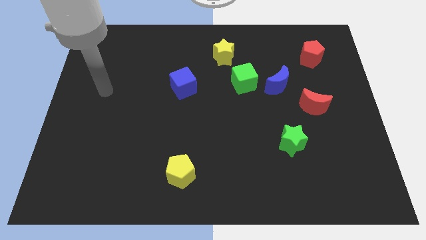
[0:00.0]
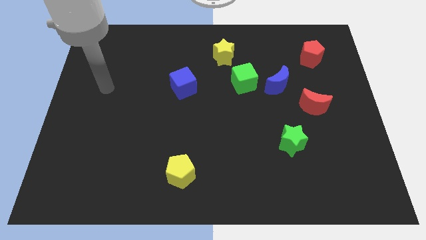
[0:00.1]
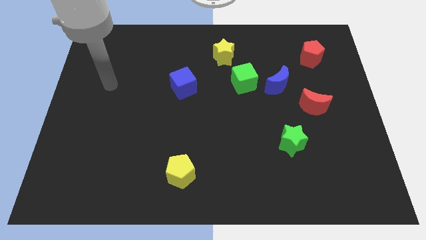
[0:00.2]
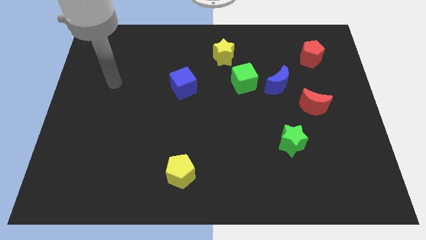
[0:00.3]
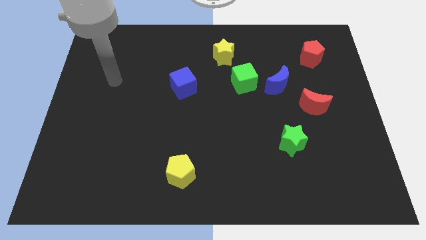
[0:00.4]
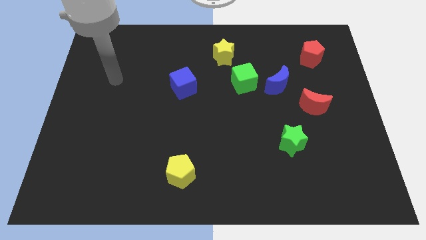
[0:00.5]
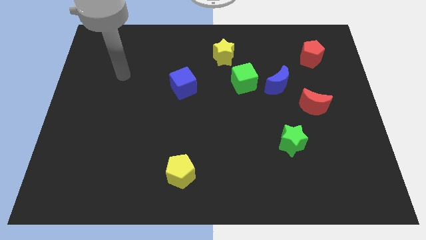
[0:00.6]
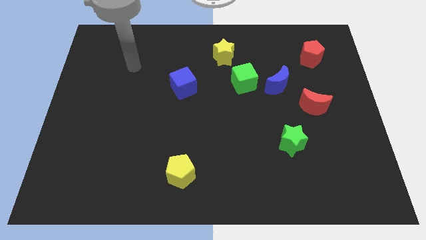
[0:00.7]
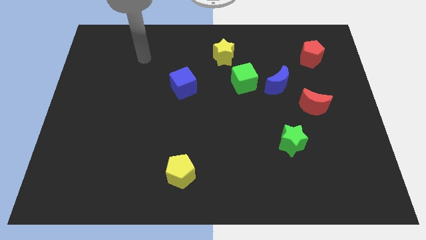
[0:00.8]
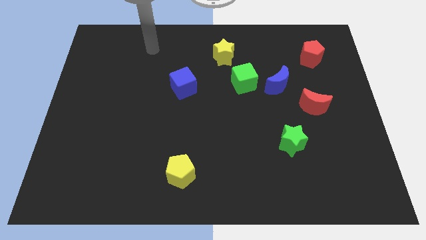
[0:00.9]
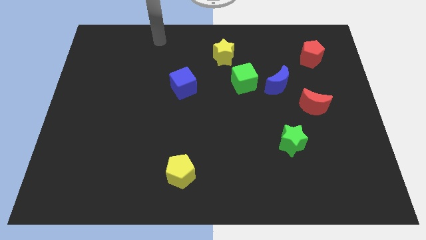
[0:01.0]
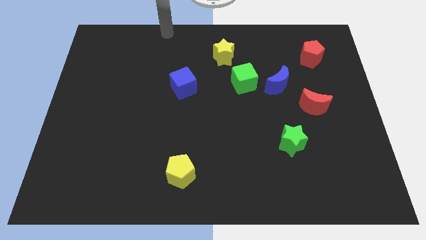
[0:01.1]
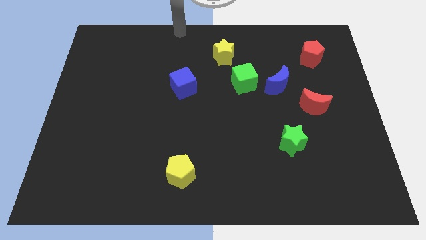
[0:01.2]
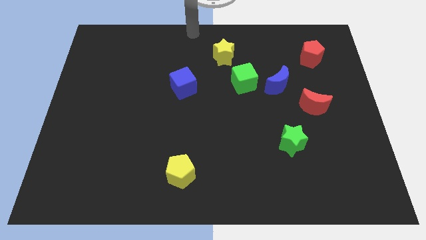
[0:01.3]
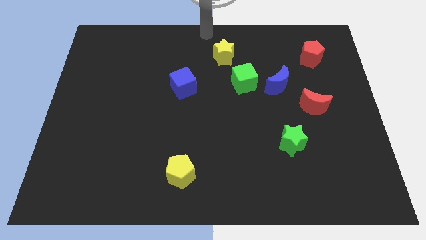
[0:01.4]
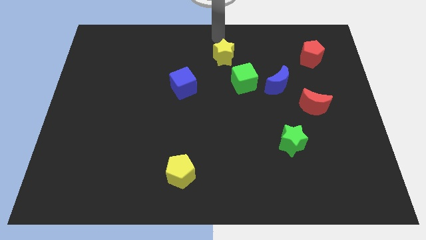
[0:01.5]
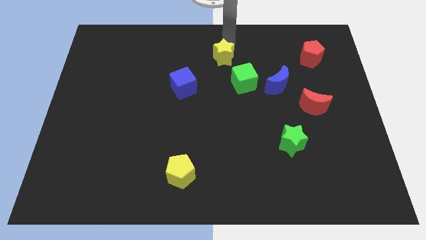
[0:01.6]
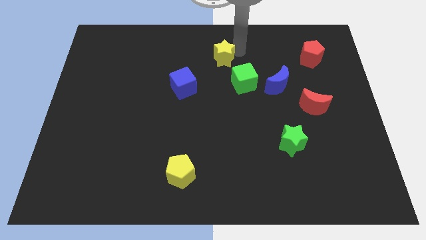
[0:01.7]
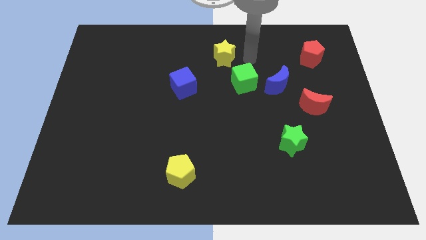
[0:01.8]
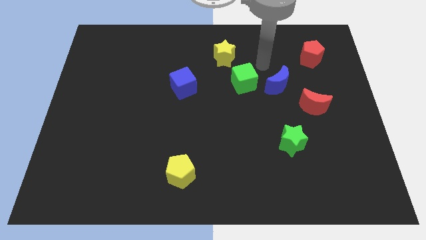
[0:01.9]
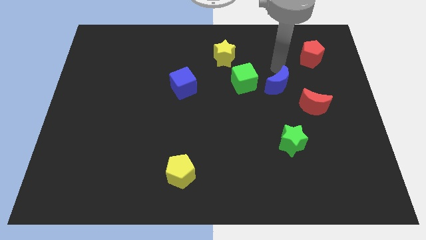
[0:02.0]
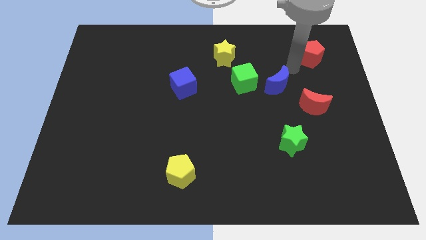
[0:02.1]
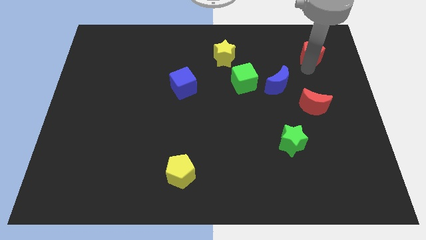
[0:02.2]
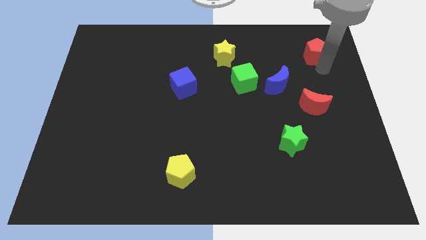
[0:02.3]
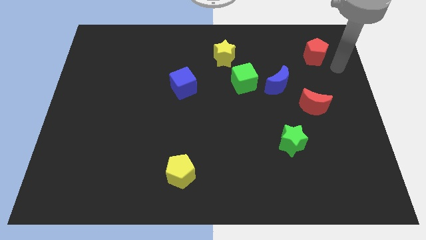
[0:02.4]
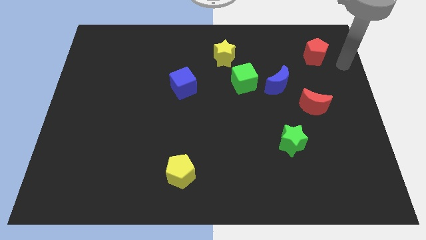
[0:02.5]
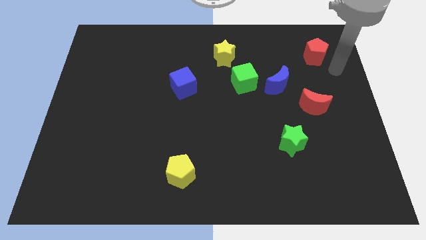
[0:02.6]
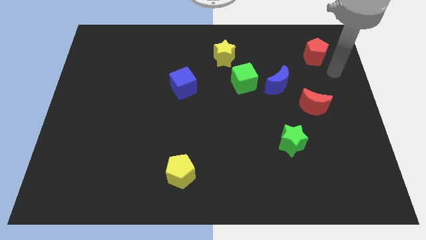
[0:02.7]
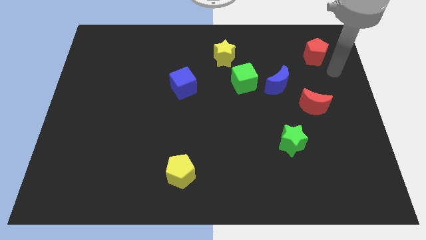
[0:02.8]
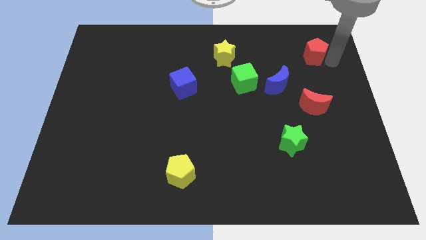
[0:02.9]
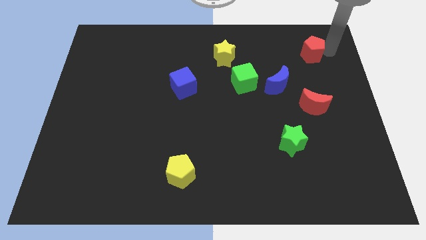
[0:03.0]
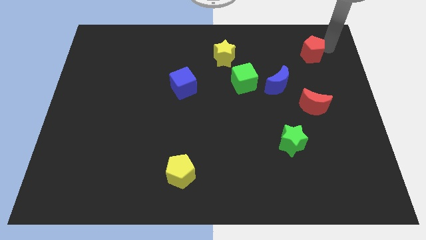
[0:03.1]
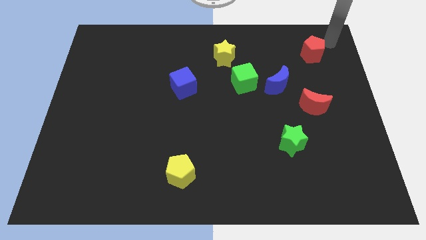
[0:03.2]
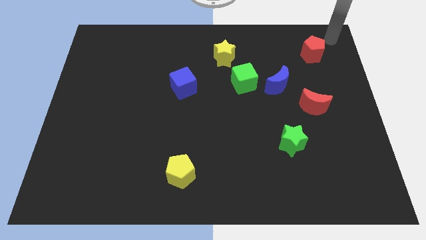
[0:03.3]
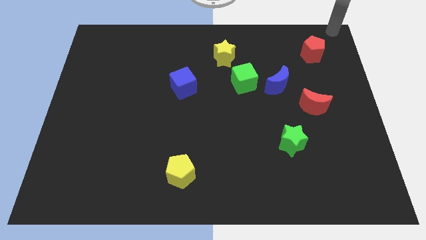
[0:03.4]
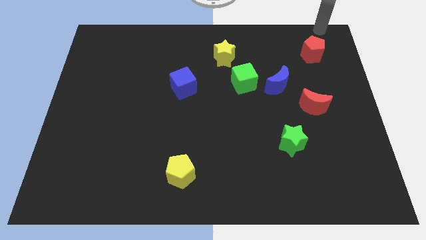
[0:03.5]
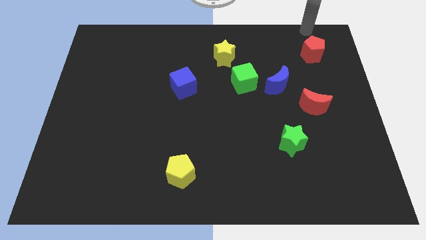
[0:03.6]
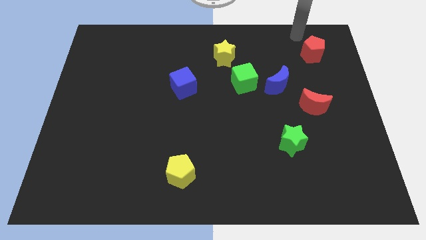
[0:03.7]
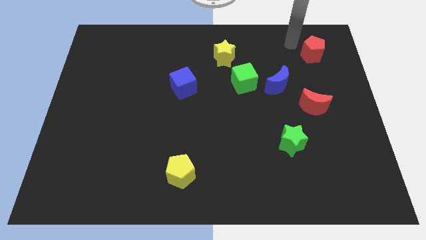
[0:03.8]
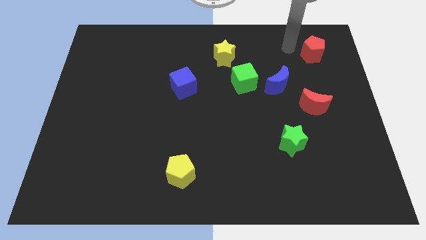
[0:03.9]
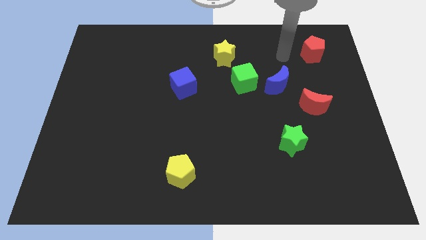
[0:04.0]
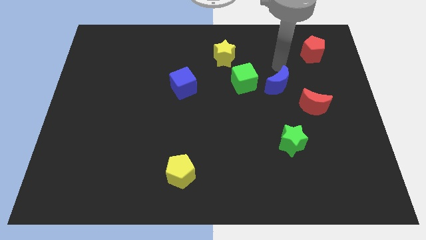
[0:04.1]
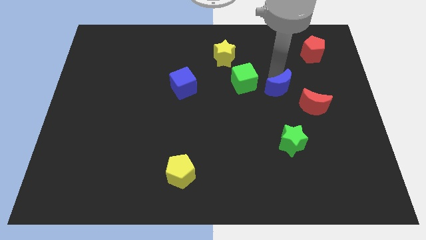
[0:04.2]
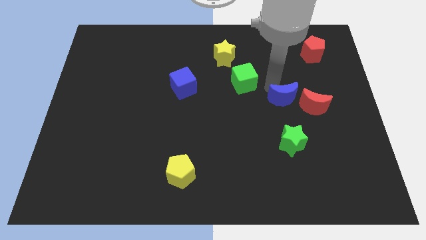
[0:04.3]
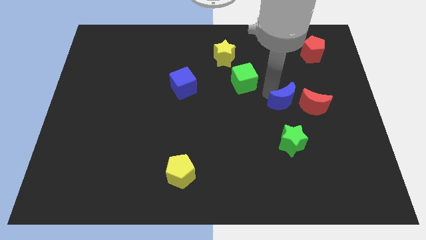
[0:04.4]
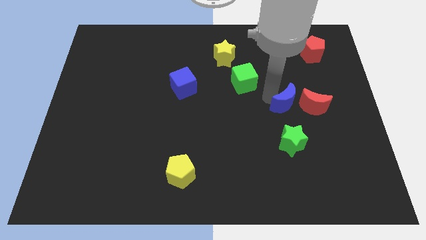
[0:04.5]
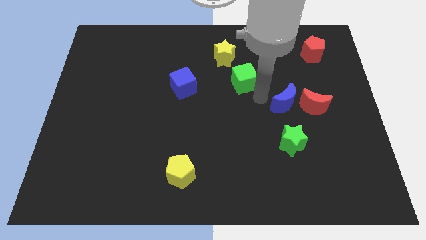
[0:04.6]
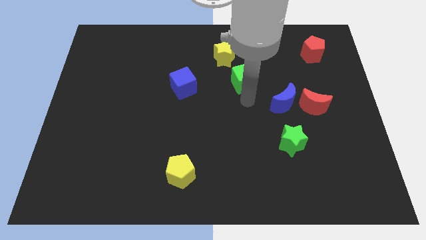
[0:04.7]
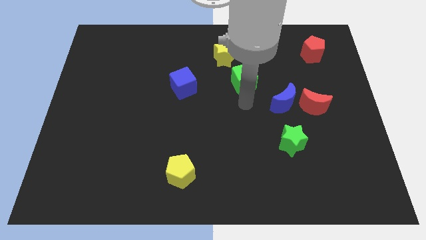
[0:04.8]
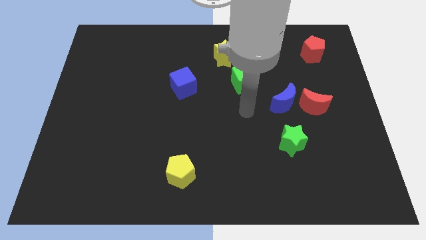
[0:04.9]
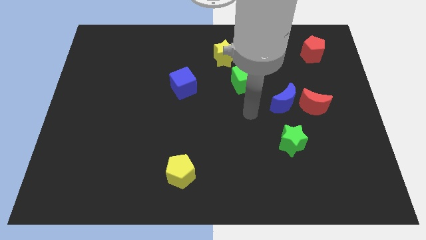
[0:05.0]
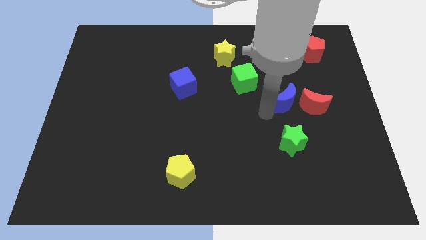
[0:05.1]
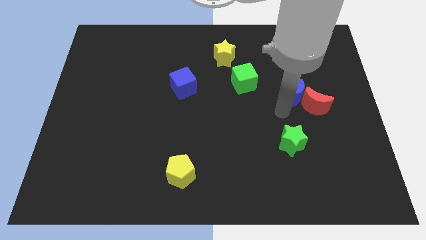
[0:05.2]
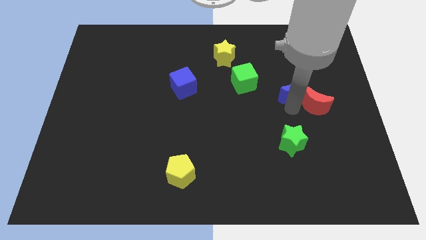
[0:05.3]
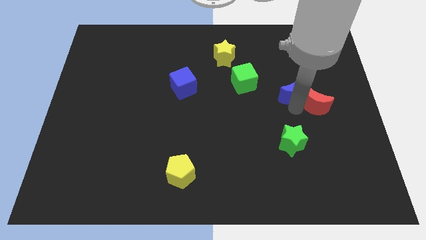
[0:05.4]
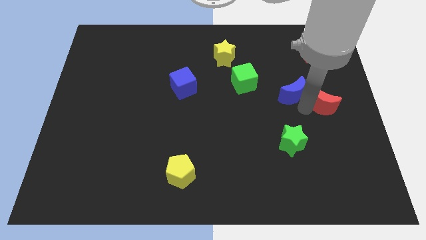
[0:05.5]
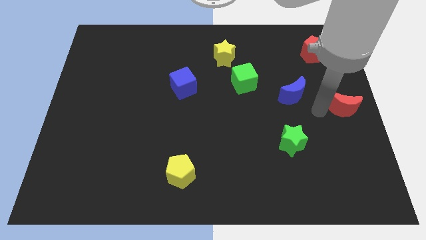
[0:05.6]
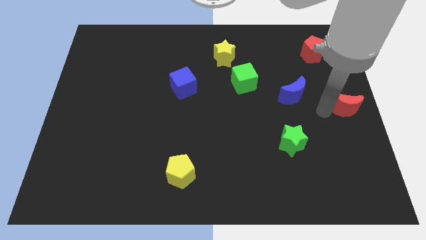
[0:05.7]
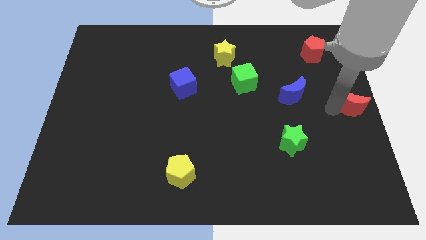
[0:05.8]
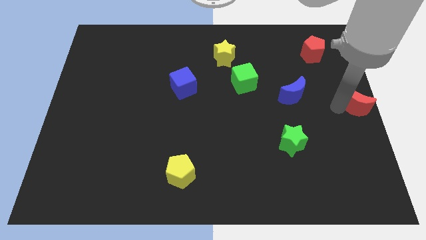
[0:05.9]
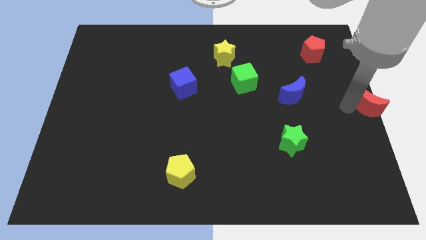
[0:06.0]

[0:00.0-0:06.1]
push the red crescent to the right center of the board

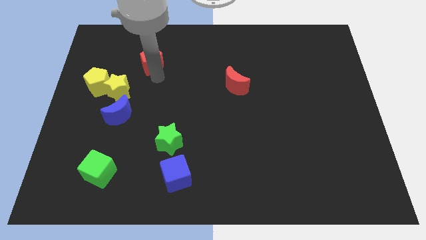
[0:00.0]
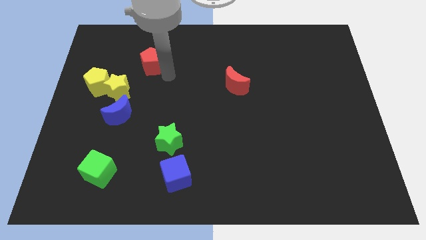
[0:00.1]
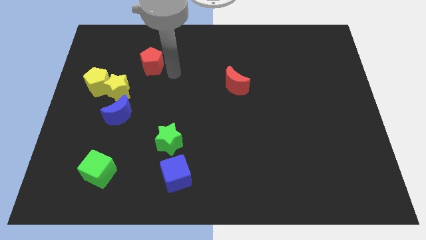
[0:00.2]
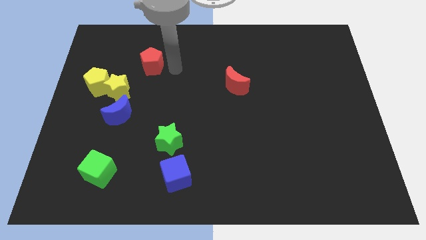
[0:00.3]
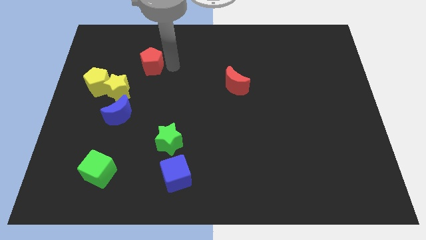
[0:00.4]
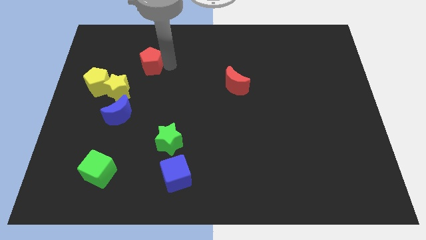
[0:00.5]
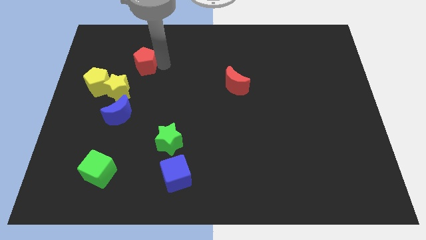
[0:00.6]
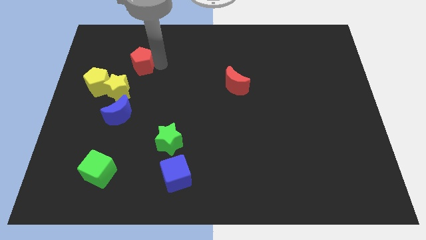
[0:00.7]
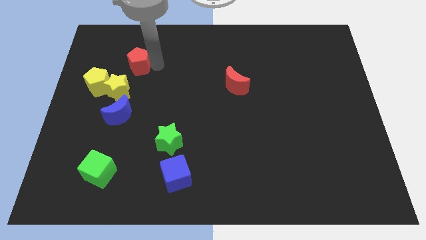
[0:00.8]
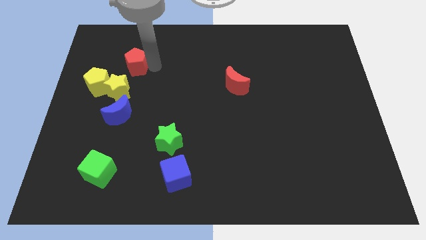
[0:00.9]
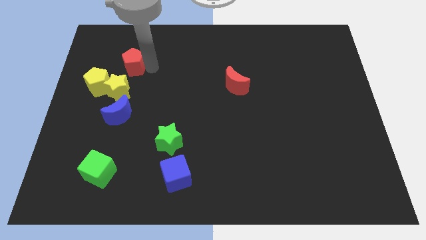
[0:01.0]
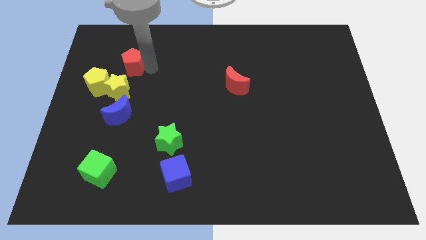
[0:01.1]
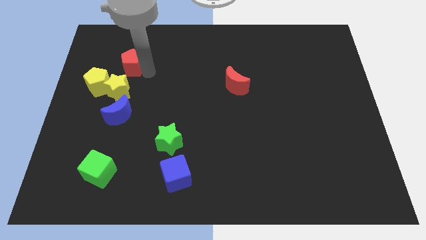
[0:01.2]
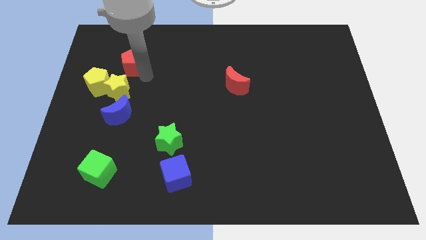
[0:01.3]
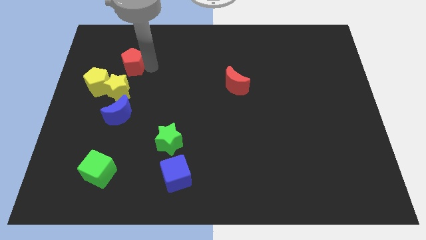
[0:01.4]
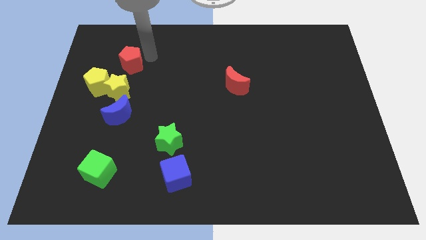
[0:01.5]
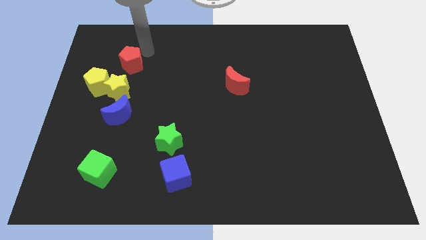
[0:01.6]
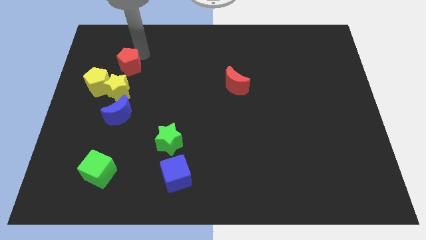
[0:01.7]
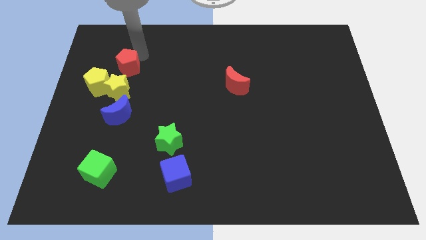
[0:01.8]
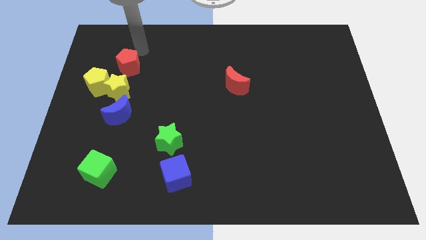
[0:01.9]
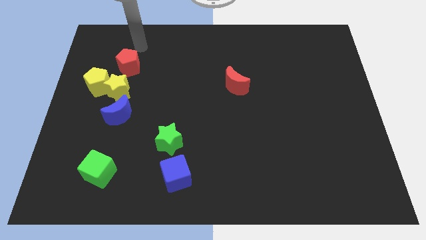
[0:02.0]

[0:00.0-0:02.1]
push the red pentagon vertically to the top right of the yellow star

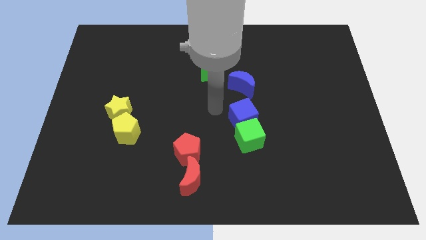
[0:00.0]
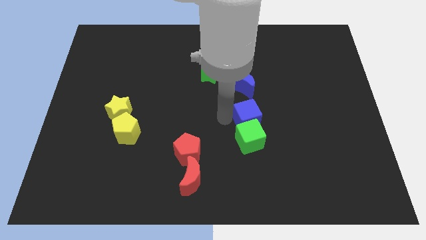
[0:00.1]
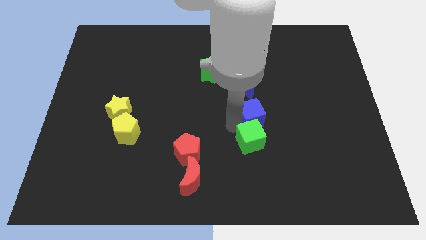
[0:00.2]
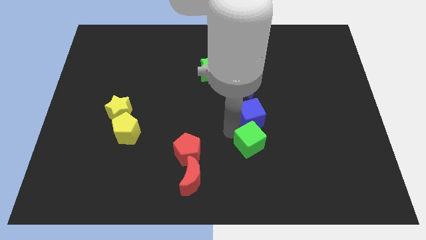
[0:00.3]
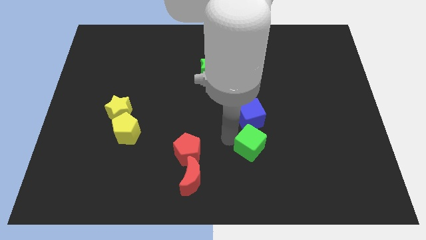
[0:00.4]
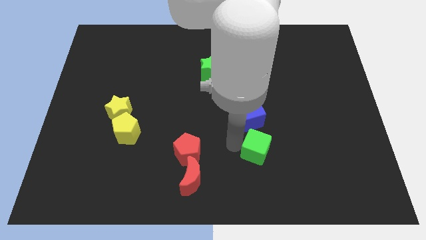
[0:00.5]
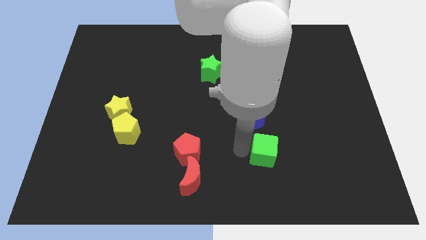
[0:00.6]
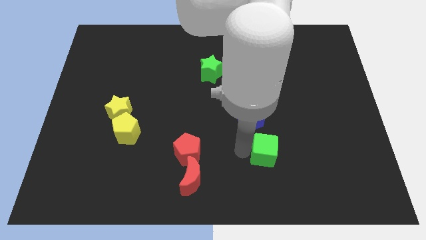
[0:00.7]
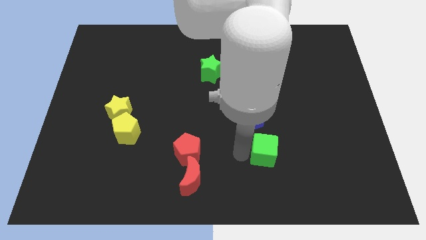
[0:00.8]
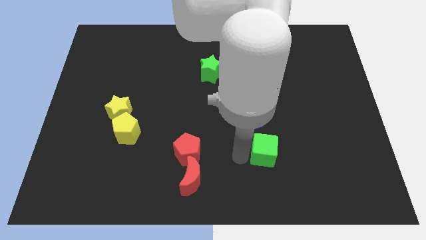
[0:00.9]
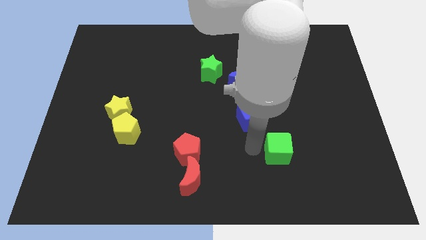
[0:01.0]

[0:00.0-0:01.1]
push the green cube away from the blue cube
